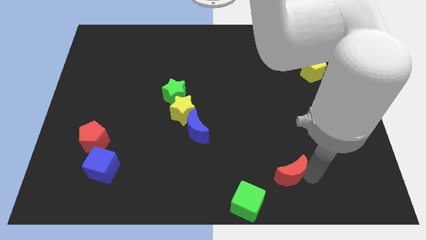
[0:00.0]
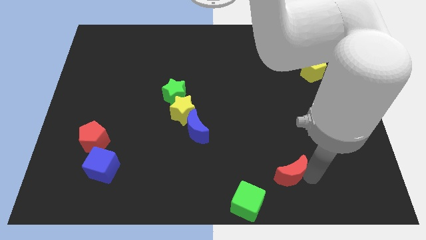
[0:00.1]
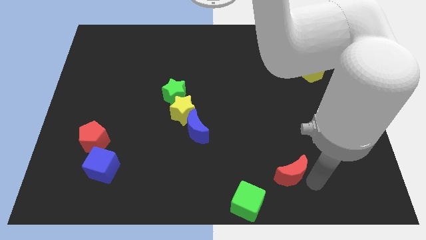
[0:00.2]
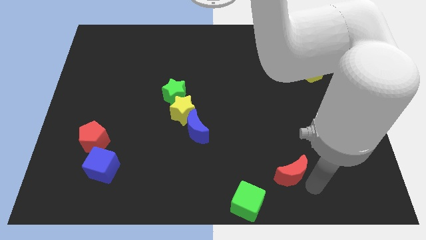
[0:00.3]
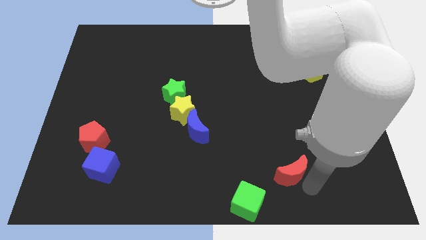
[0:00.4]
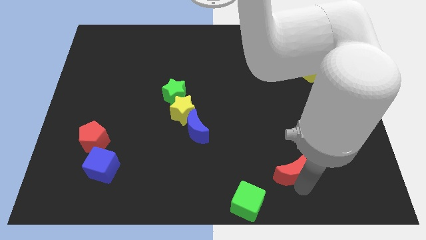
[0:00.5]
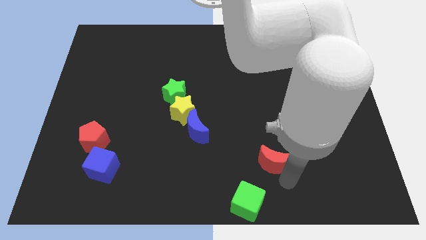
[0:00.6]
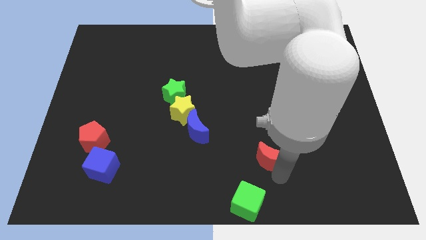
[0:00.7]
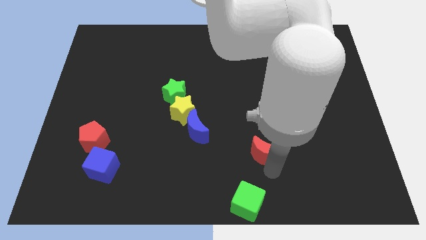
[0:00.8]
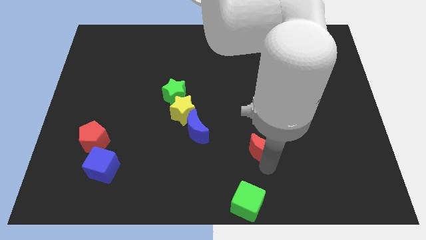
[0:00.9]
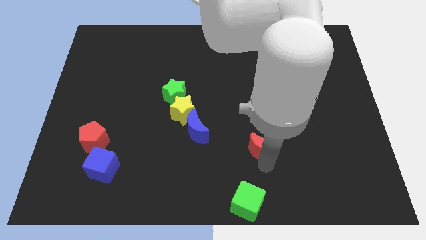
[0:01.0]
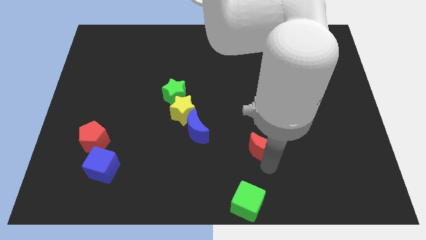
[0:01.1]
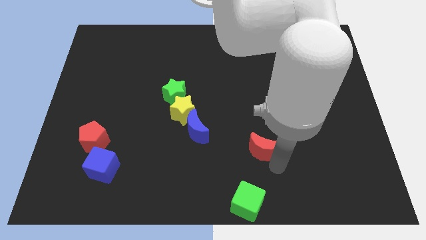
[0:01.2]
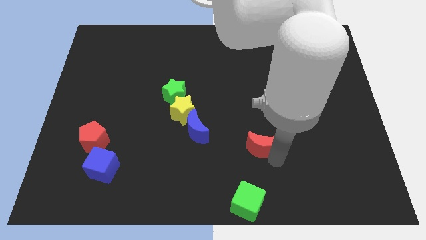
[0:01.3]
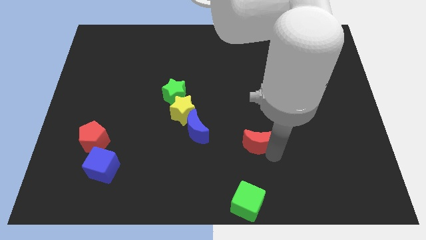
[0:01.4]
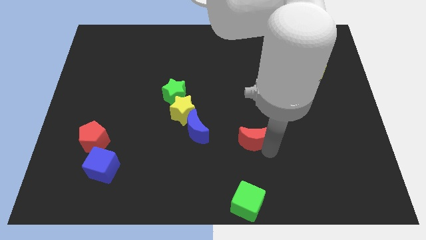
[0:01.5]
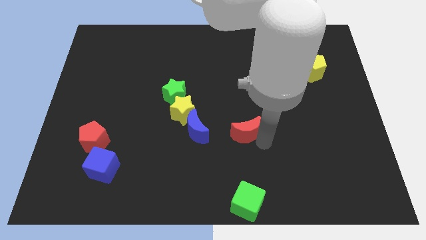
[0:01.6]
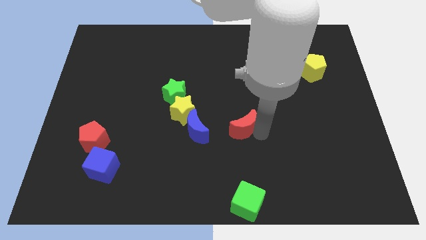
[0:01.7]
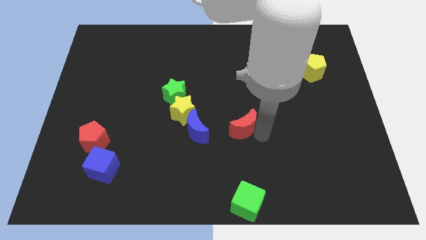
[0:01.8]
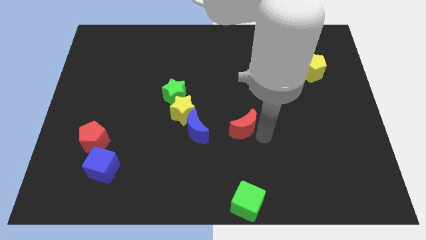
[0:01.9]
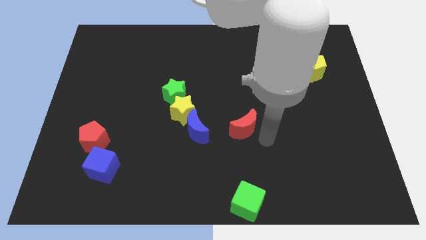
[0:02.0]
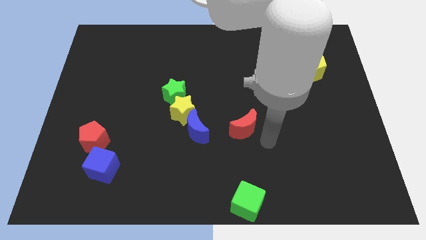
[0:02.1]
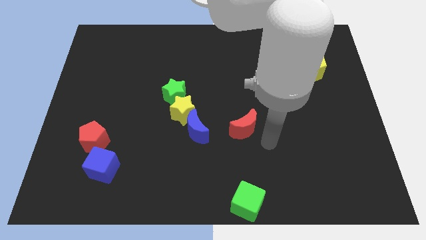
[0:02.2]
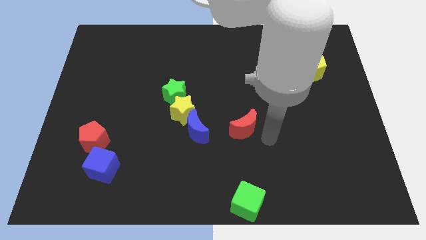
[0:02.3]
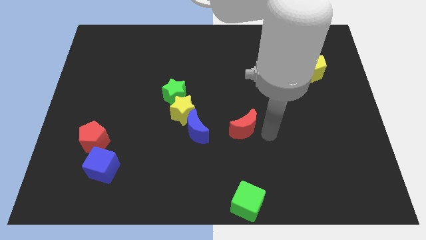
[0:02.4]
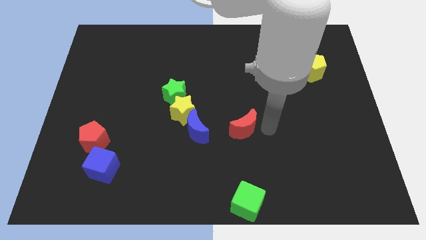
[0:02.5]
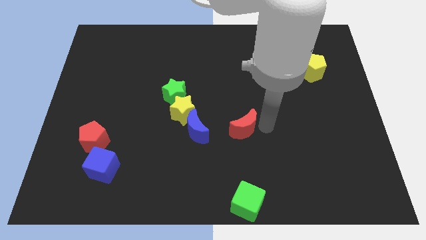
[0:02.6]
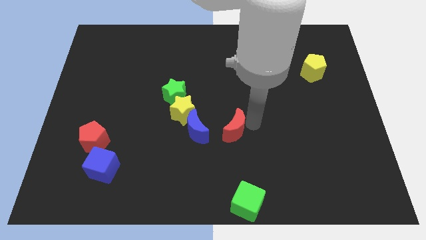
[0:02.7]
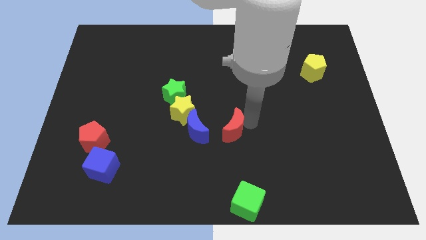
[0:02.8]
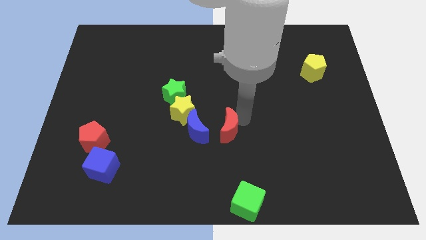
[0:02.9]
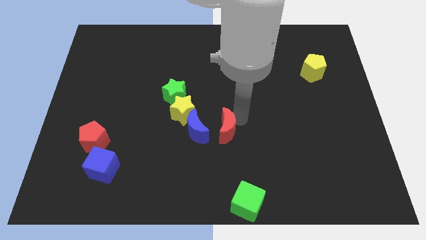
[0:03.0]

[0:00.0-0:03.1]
push the red crescent to the right of the blue crescent

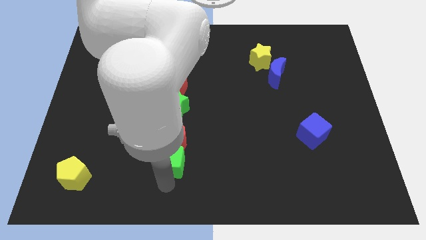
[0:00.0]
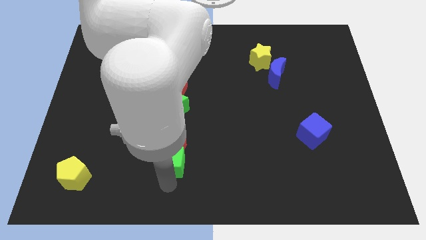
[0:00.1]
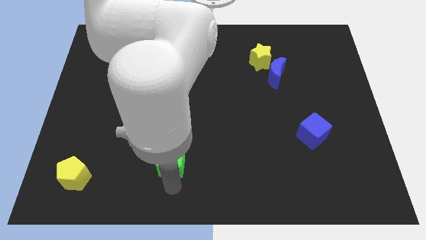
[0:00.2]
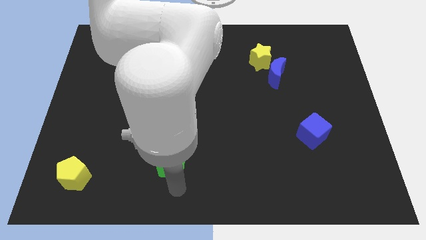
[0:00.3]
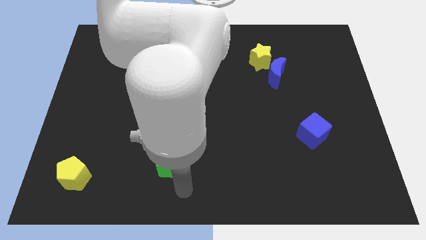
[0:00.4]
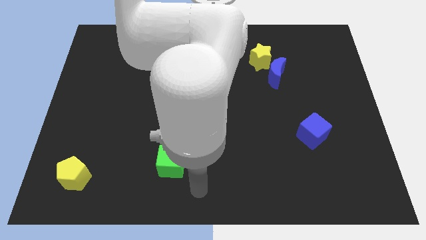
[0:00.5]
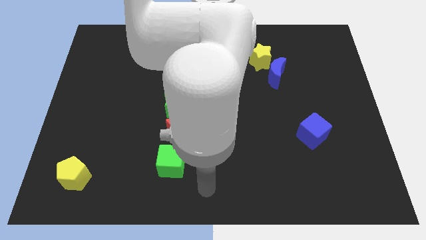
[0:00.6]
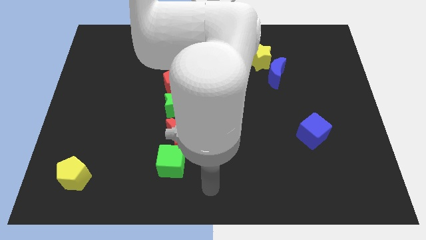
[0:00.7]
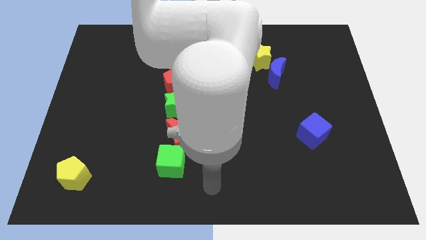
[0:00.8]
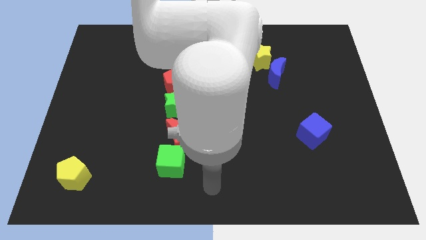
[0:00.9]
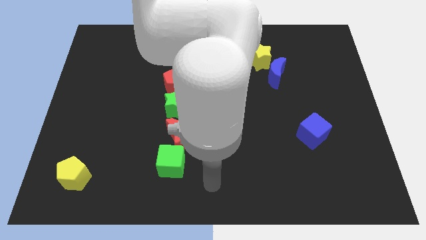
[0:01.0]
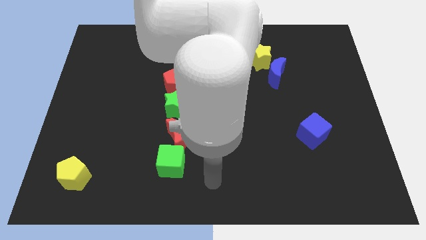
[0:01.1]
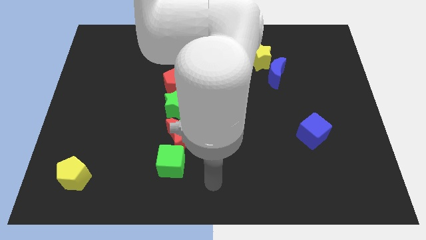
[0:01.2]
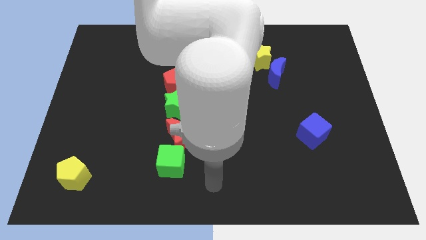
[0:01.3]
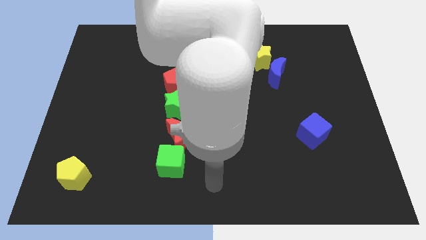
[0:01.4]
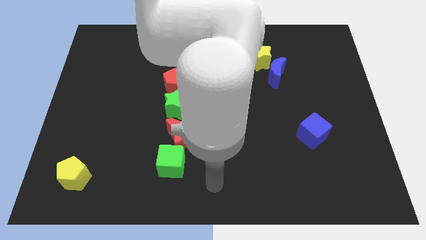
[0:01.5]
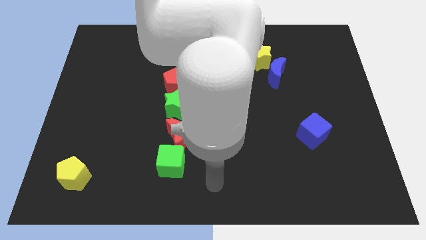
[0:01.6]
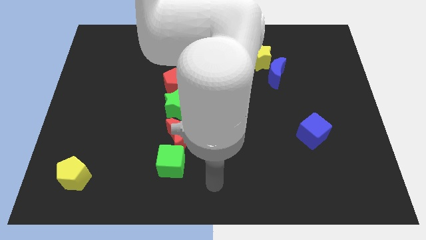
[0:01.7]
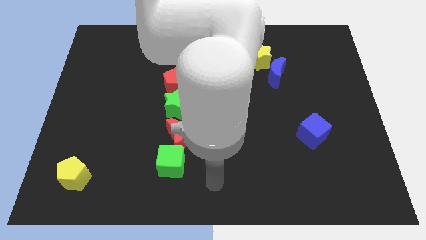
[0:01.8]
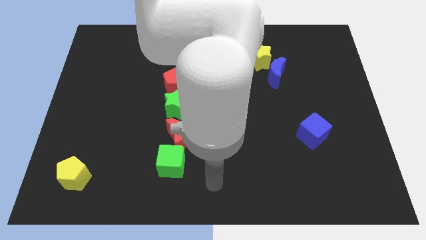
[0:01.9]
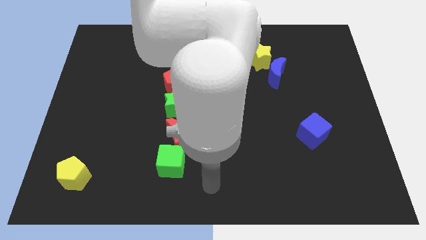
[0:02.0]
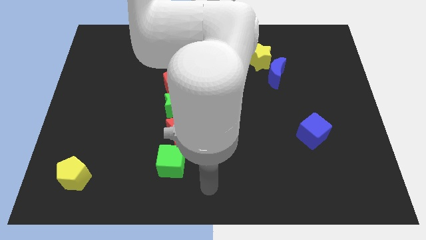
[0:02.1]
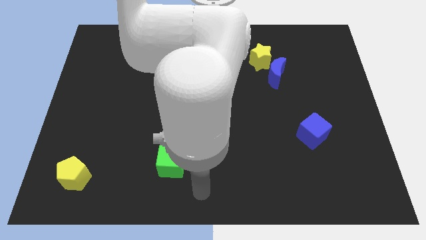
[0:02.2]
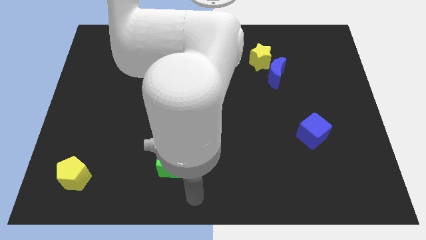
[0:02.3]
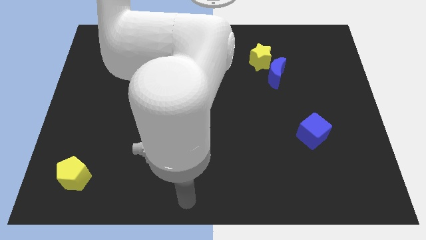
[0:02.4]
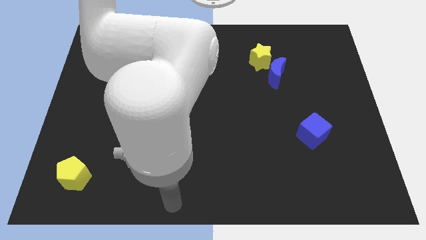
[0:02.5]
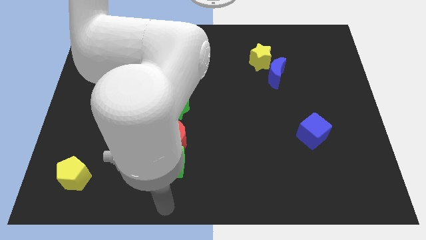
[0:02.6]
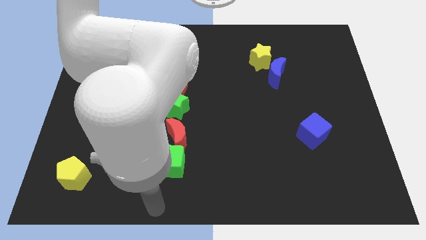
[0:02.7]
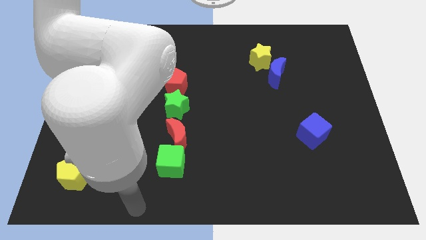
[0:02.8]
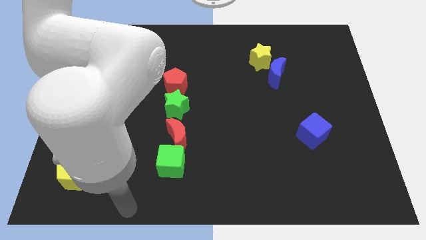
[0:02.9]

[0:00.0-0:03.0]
move the arm away from the green cube

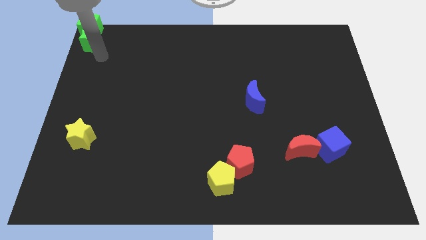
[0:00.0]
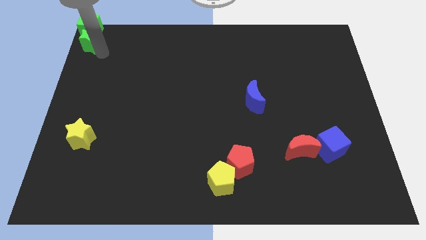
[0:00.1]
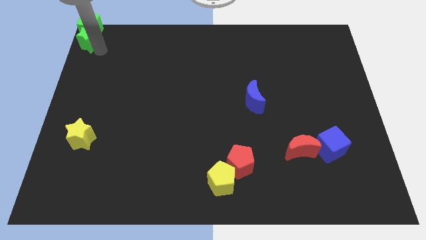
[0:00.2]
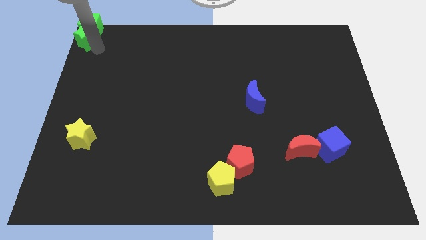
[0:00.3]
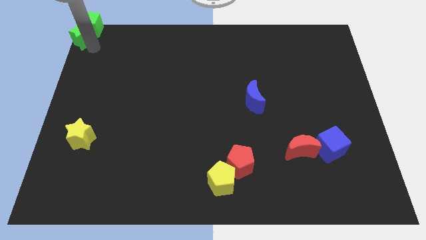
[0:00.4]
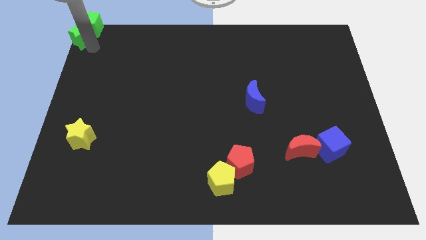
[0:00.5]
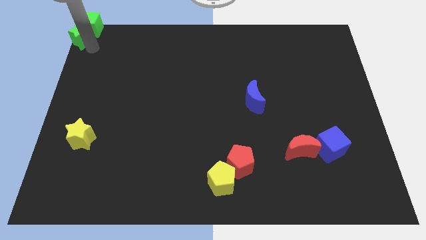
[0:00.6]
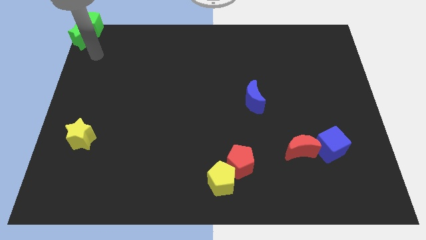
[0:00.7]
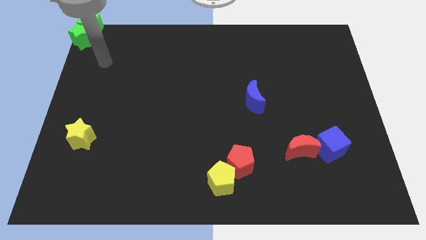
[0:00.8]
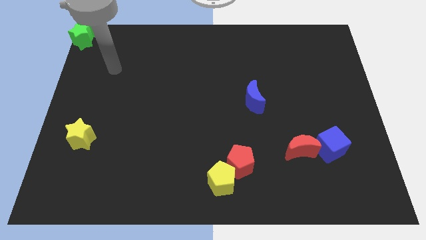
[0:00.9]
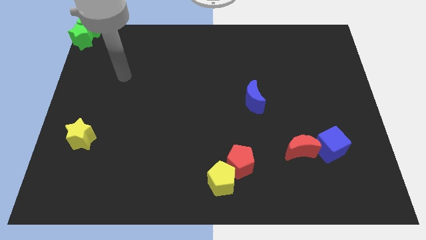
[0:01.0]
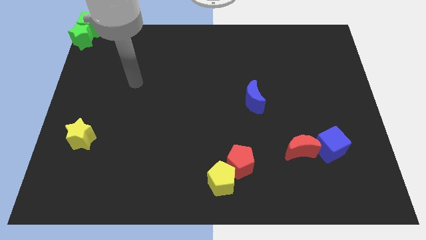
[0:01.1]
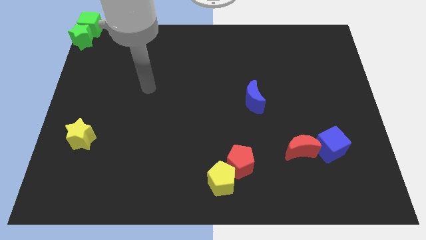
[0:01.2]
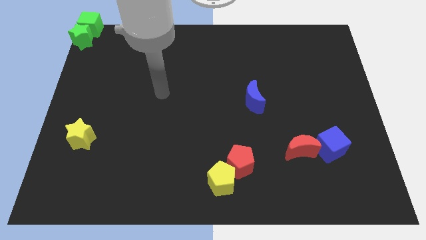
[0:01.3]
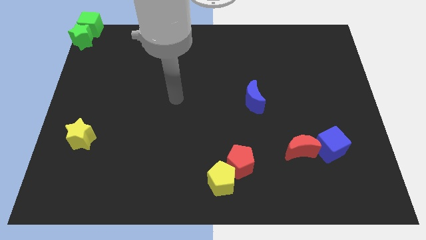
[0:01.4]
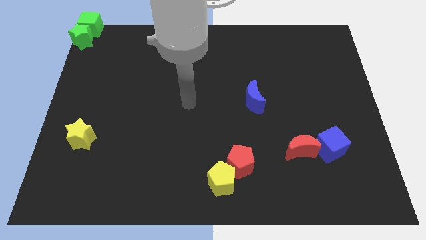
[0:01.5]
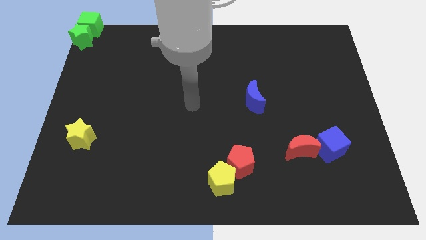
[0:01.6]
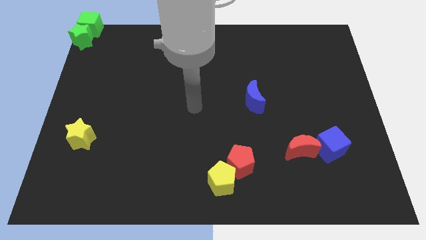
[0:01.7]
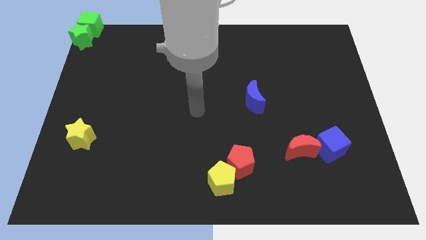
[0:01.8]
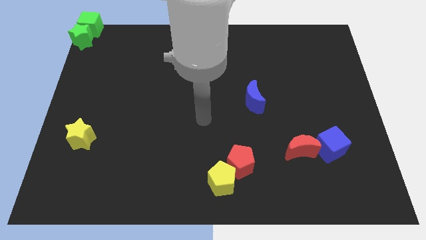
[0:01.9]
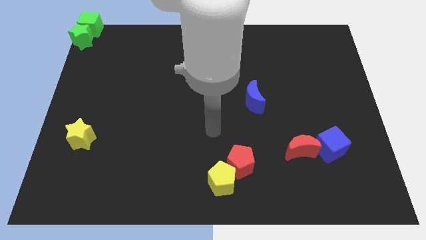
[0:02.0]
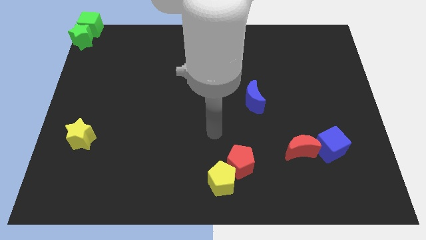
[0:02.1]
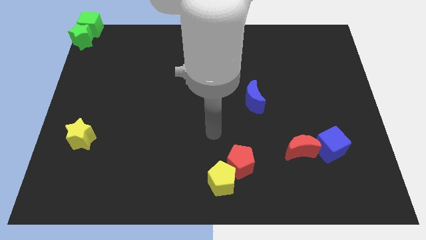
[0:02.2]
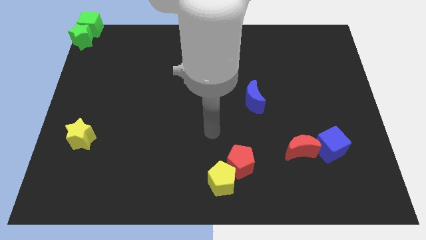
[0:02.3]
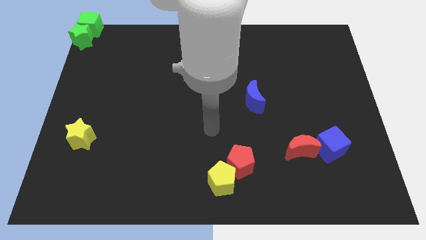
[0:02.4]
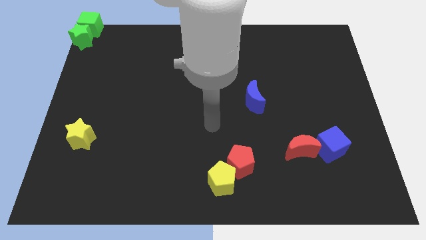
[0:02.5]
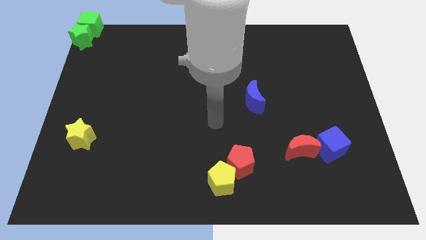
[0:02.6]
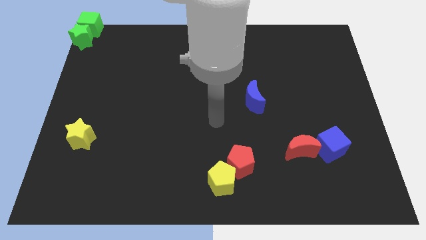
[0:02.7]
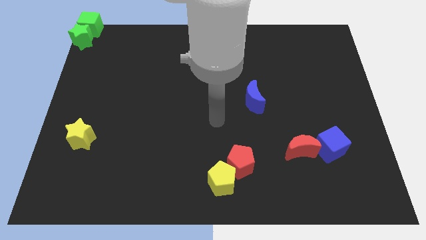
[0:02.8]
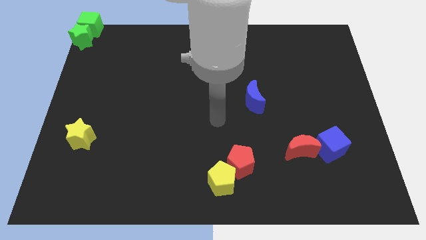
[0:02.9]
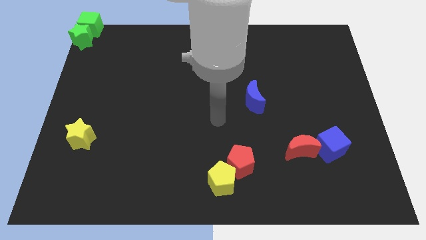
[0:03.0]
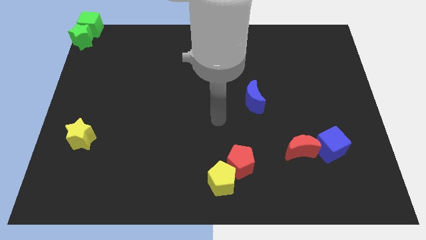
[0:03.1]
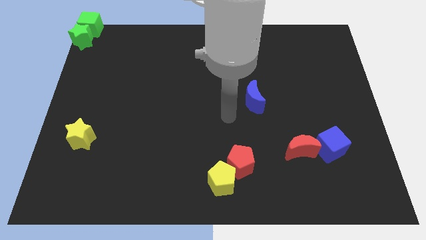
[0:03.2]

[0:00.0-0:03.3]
move your arm to center of the board
